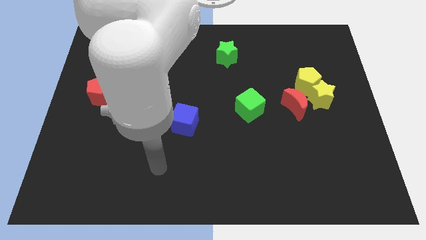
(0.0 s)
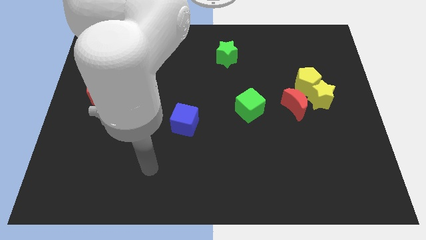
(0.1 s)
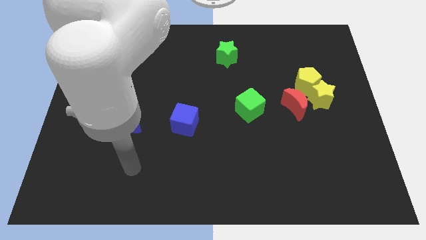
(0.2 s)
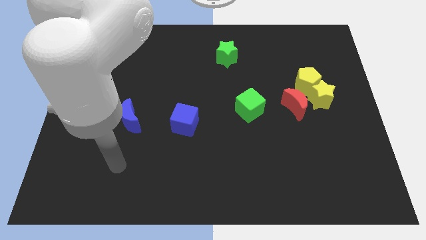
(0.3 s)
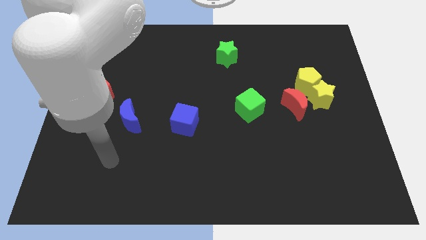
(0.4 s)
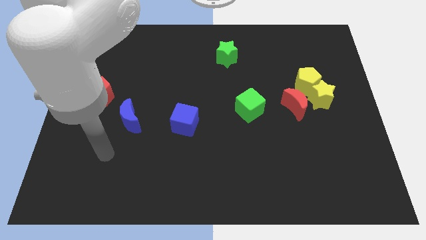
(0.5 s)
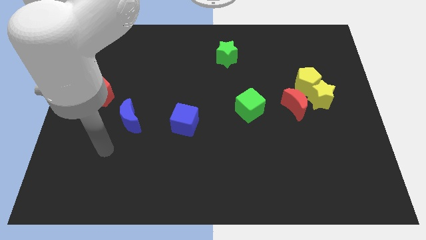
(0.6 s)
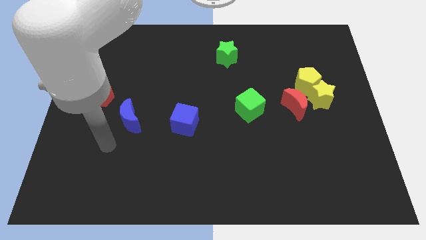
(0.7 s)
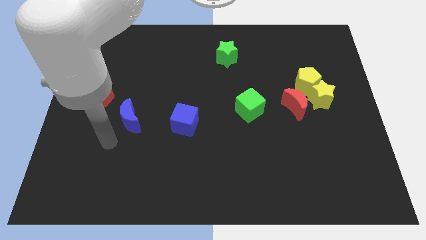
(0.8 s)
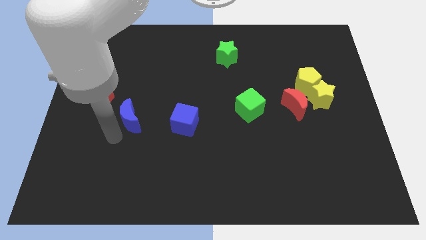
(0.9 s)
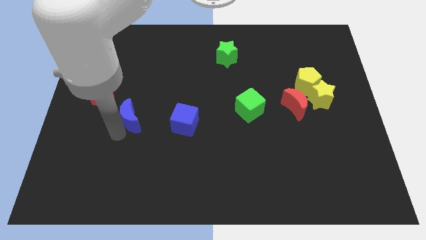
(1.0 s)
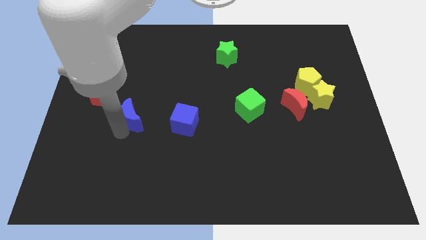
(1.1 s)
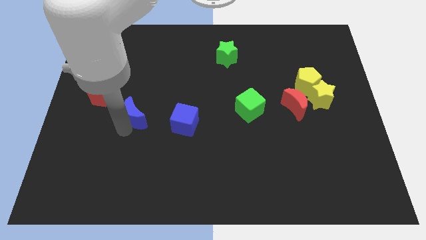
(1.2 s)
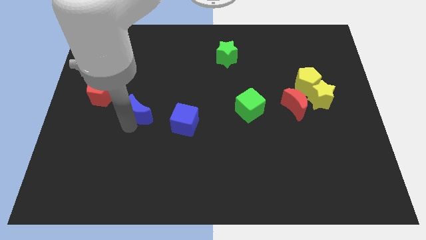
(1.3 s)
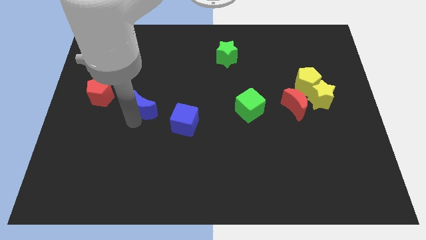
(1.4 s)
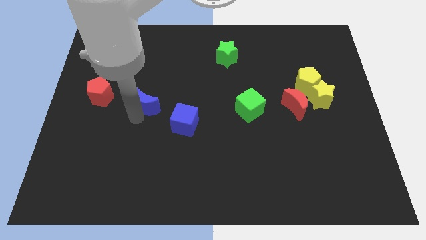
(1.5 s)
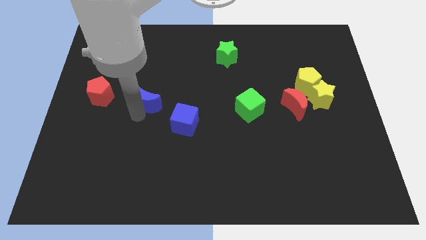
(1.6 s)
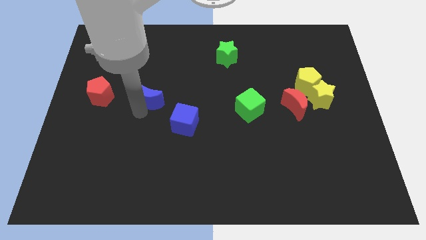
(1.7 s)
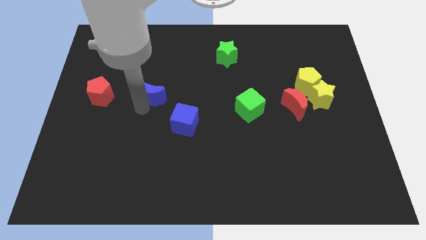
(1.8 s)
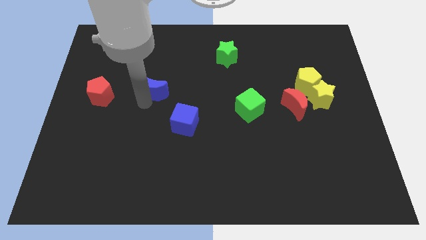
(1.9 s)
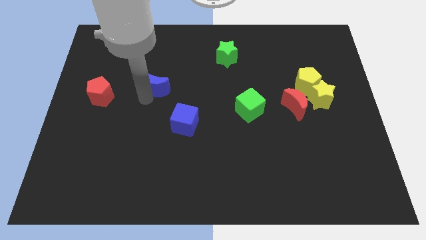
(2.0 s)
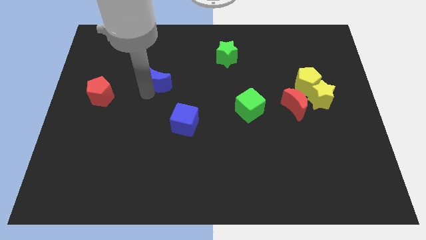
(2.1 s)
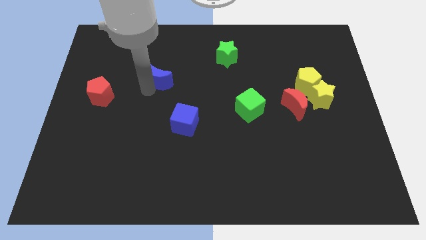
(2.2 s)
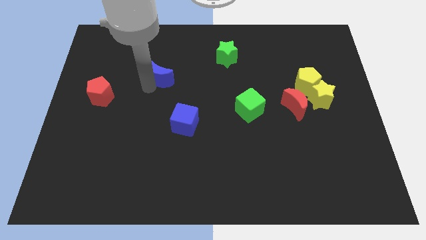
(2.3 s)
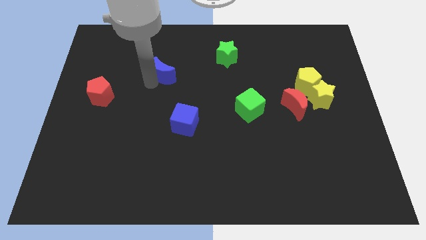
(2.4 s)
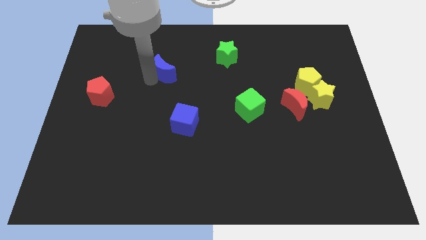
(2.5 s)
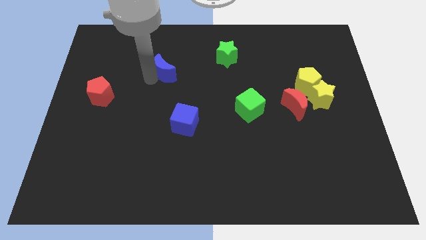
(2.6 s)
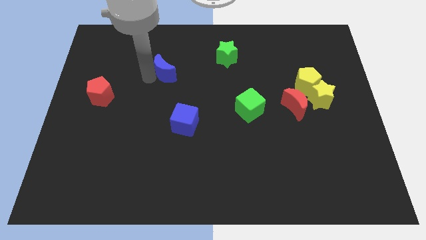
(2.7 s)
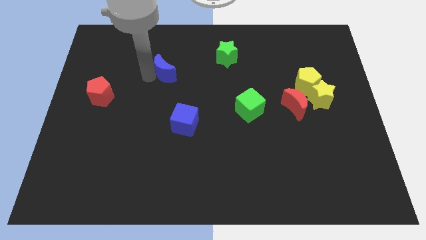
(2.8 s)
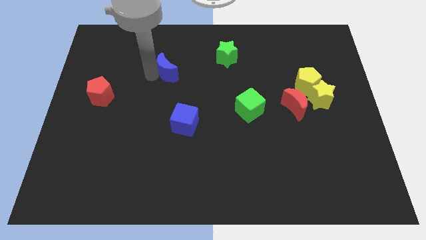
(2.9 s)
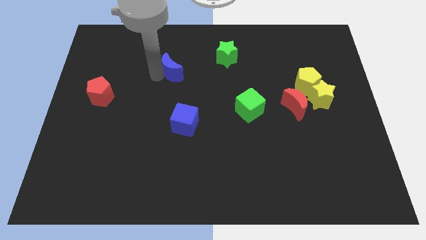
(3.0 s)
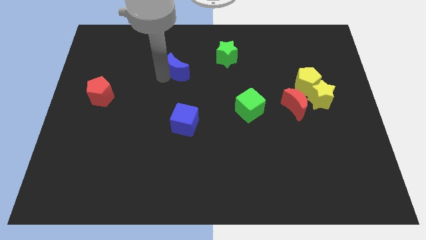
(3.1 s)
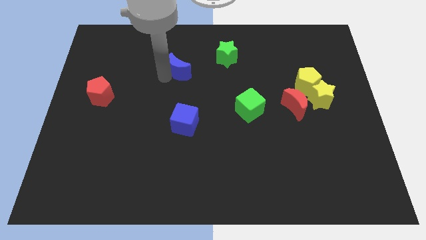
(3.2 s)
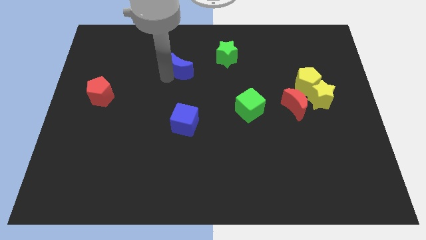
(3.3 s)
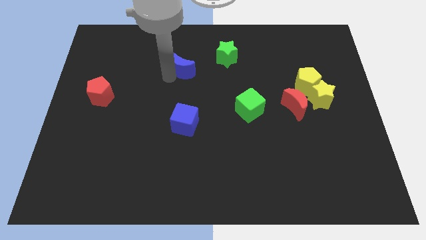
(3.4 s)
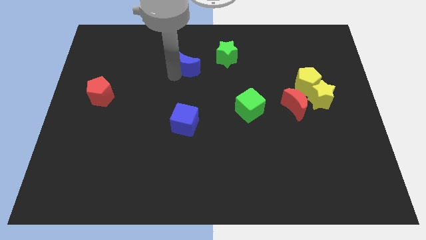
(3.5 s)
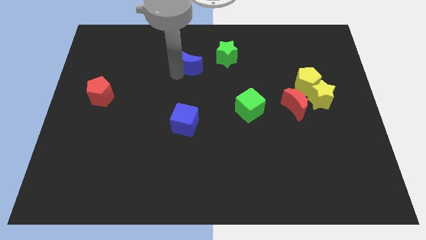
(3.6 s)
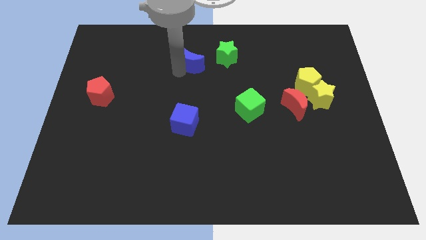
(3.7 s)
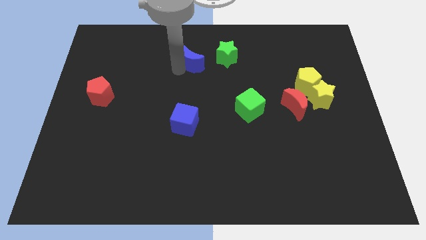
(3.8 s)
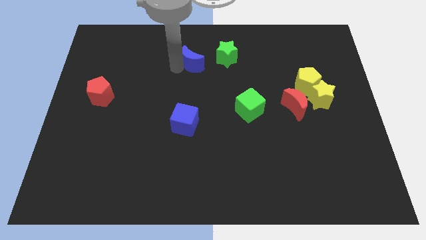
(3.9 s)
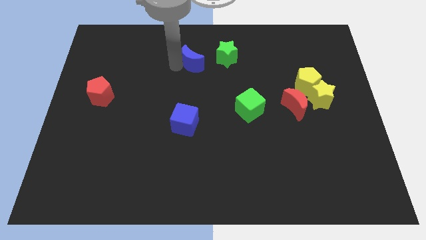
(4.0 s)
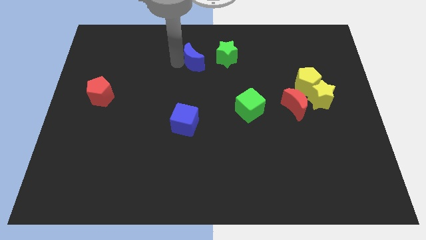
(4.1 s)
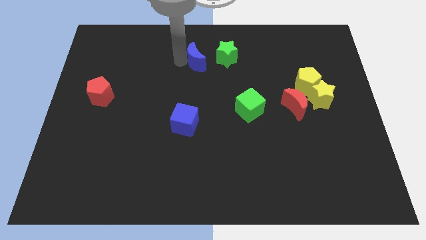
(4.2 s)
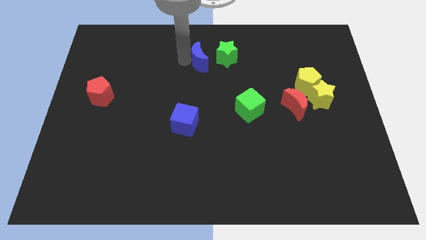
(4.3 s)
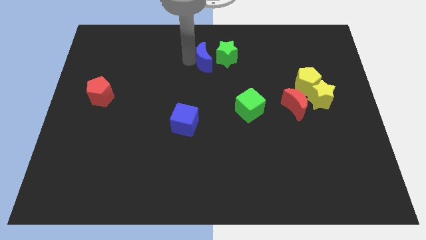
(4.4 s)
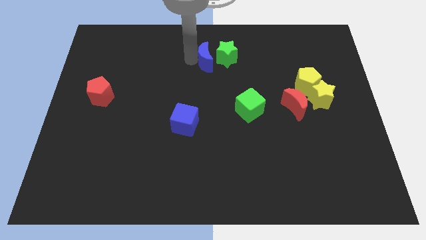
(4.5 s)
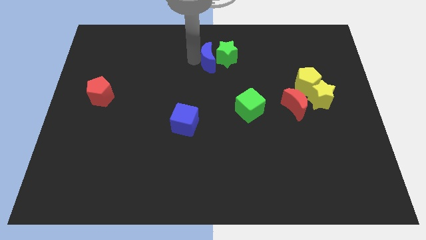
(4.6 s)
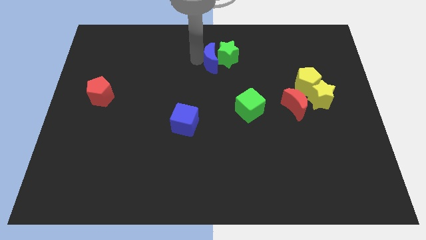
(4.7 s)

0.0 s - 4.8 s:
slide the blue moon towards the green star

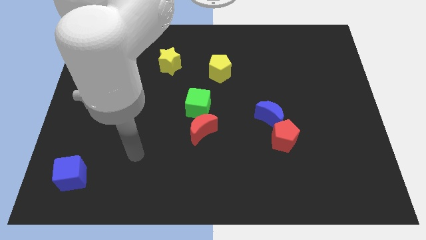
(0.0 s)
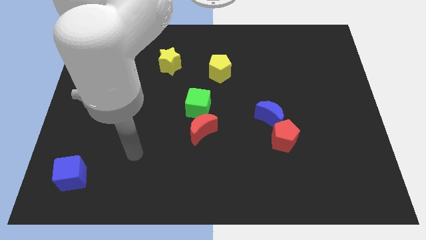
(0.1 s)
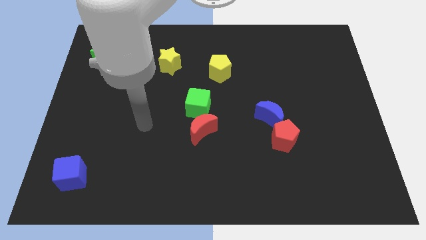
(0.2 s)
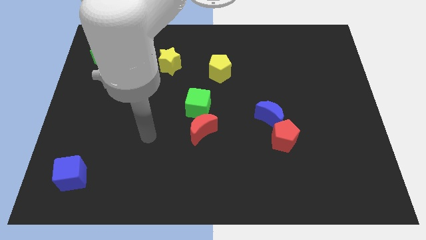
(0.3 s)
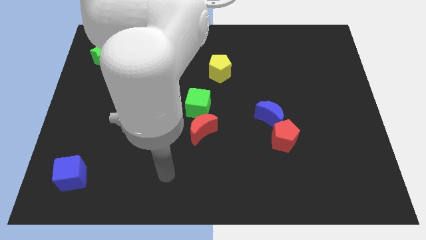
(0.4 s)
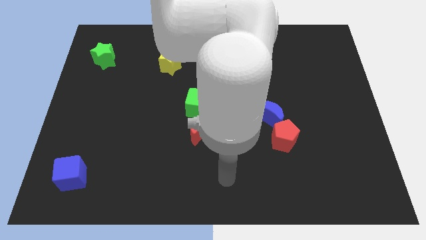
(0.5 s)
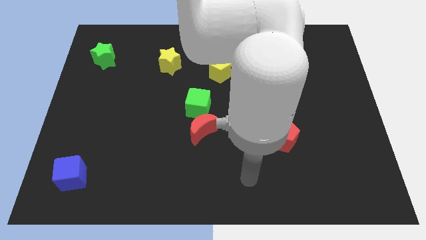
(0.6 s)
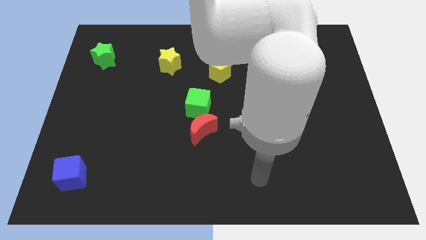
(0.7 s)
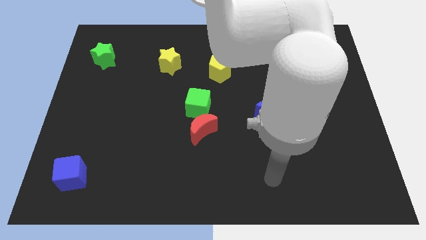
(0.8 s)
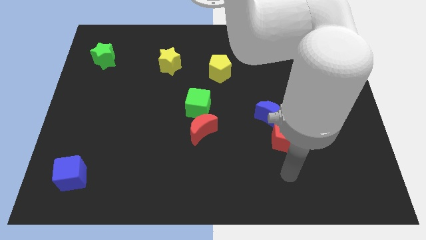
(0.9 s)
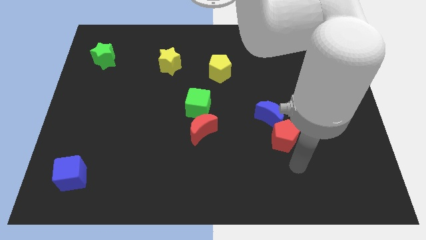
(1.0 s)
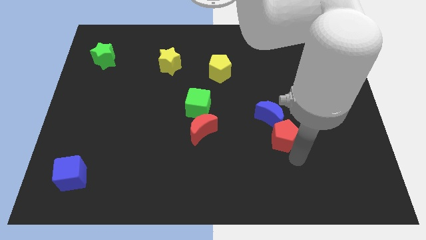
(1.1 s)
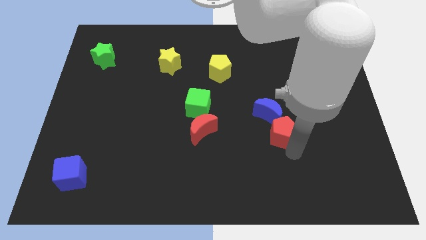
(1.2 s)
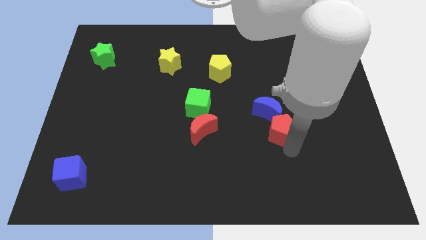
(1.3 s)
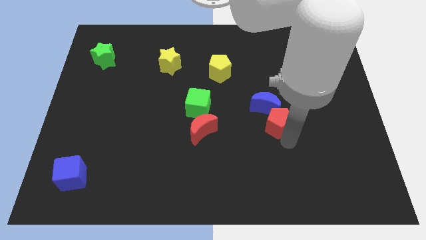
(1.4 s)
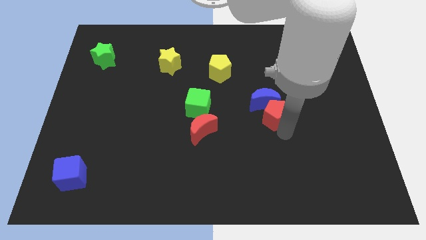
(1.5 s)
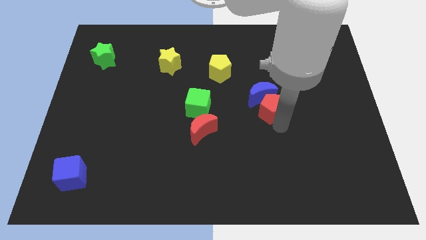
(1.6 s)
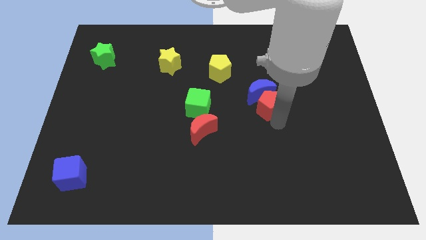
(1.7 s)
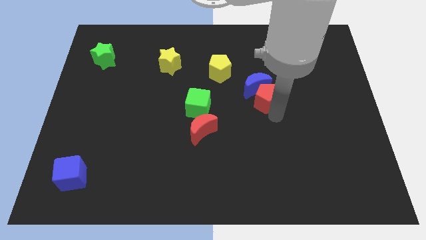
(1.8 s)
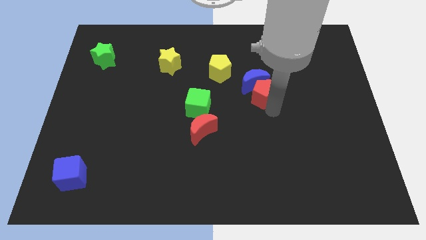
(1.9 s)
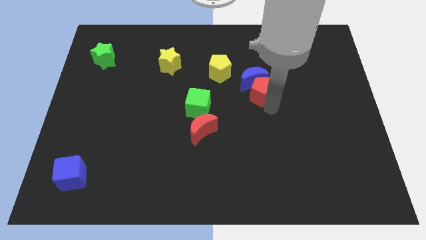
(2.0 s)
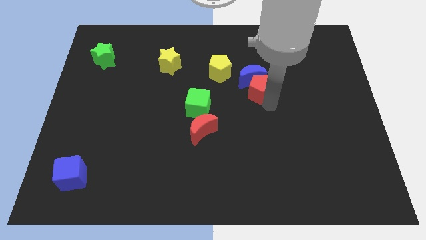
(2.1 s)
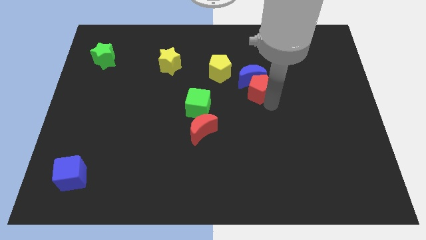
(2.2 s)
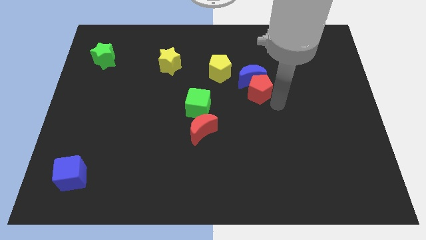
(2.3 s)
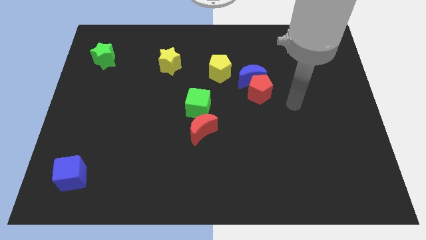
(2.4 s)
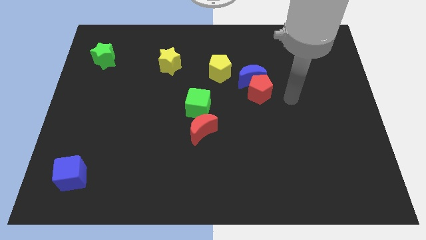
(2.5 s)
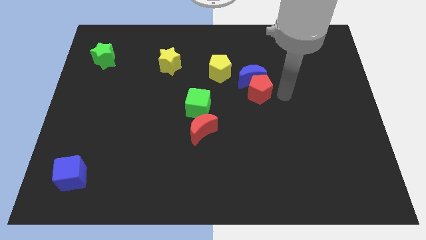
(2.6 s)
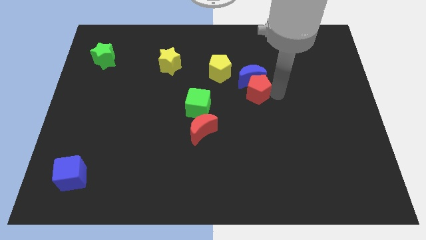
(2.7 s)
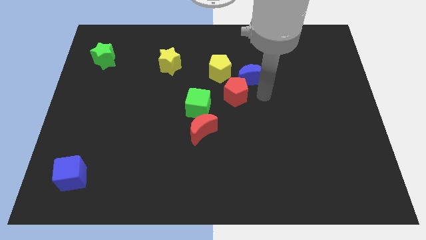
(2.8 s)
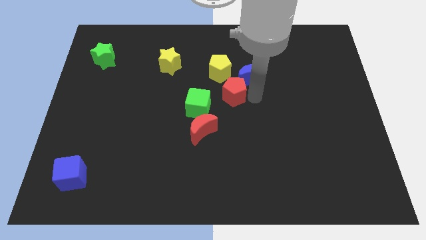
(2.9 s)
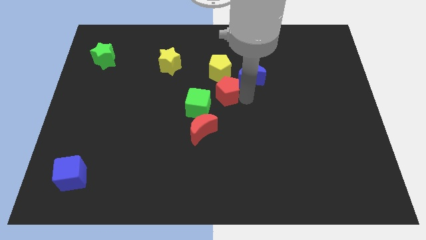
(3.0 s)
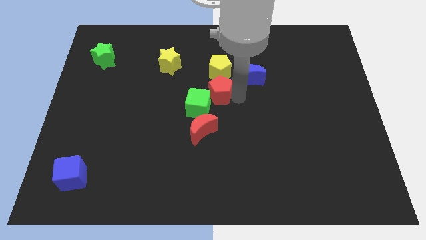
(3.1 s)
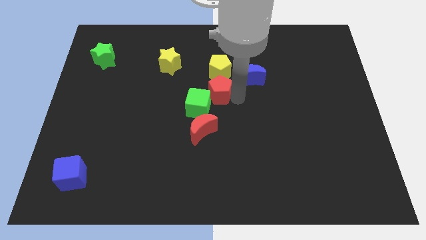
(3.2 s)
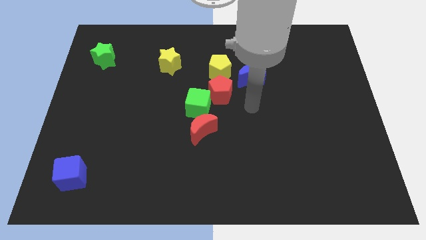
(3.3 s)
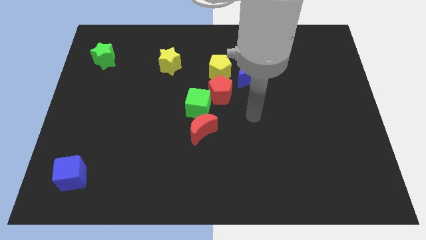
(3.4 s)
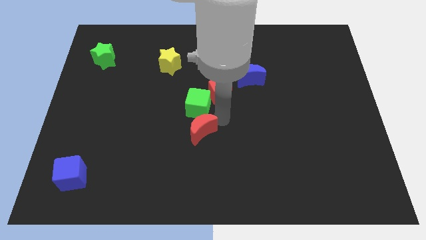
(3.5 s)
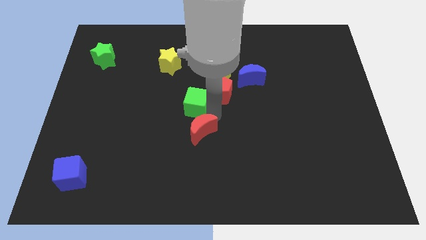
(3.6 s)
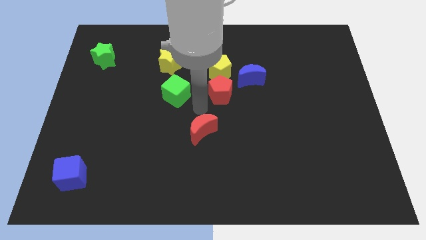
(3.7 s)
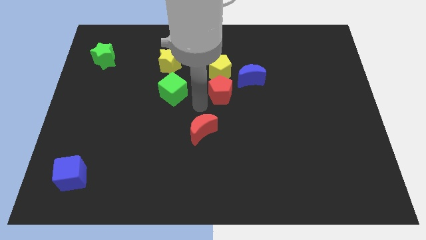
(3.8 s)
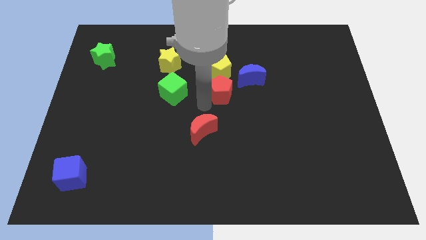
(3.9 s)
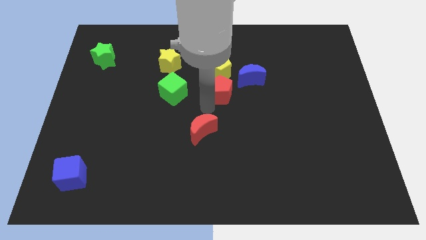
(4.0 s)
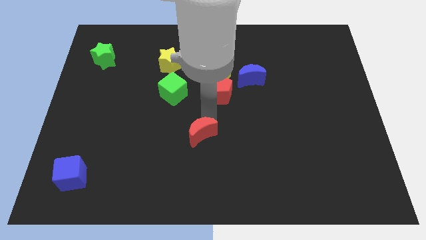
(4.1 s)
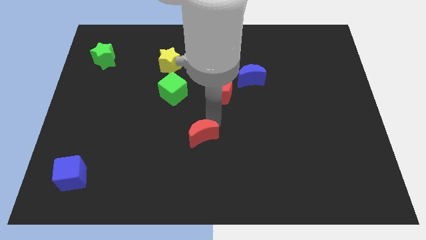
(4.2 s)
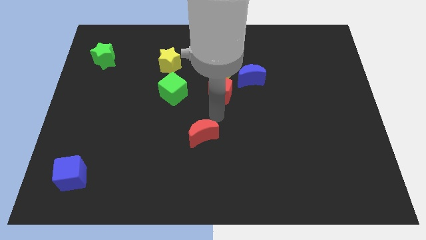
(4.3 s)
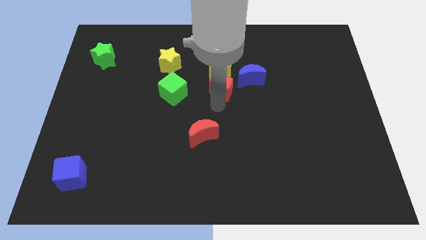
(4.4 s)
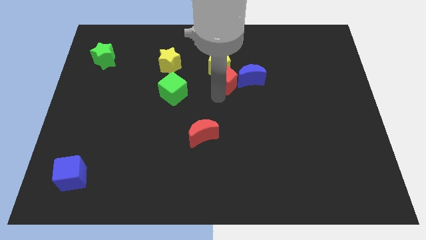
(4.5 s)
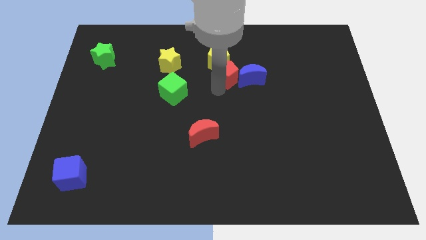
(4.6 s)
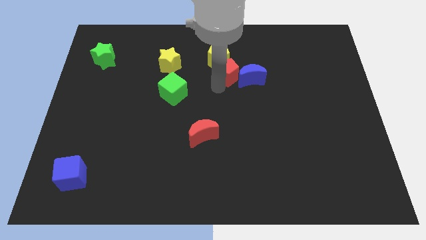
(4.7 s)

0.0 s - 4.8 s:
slide the red pentagon next to the yellow pentagon
